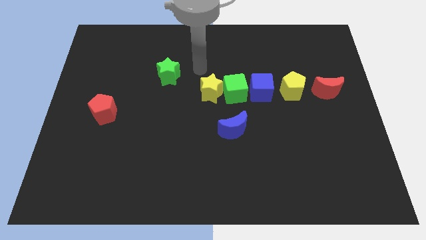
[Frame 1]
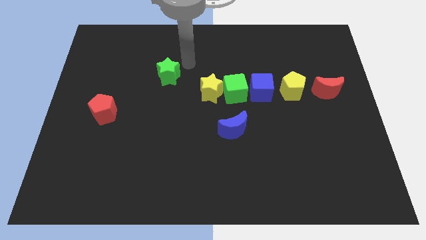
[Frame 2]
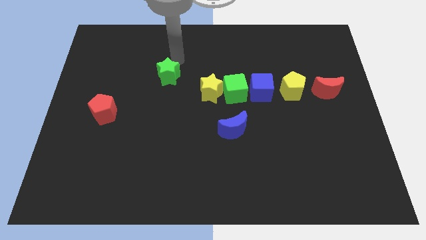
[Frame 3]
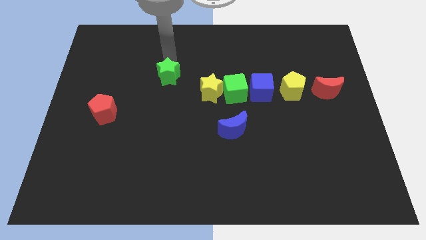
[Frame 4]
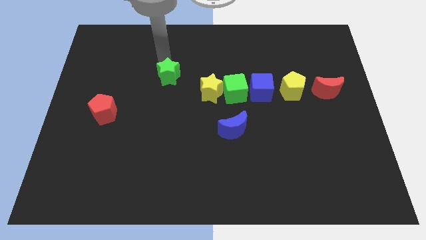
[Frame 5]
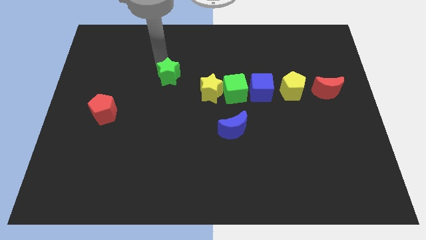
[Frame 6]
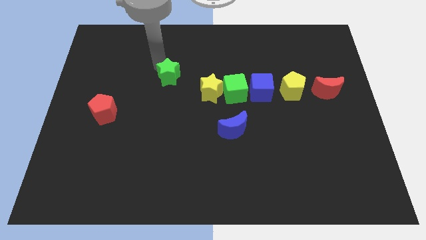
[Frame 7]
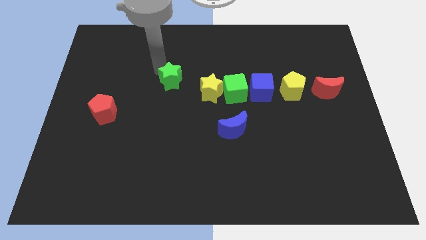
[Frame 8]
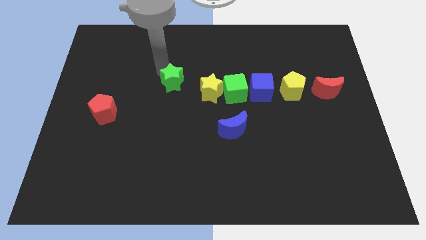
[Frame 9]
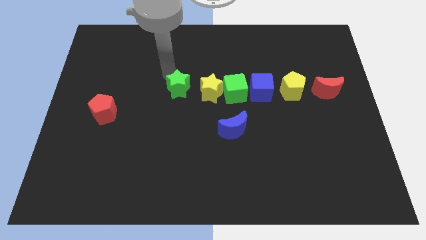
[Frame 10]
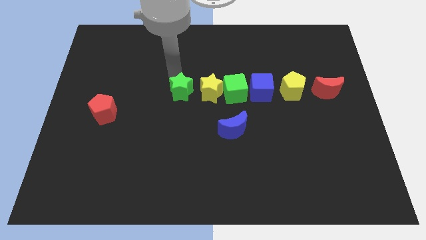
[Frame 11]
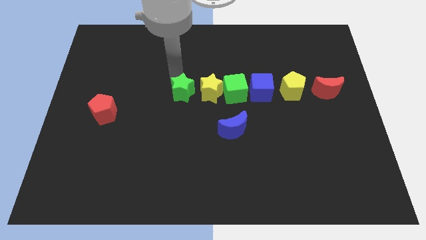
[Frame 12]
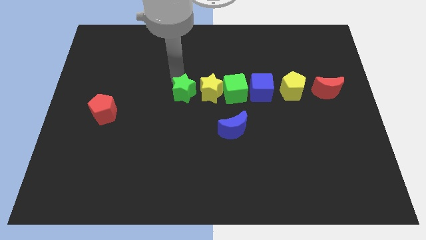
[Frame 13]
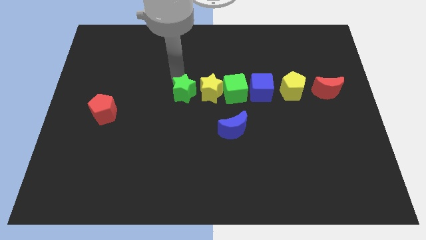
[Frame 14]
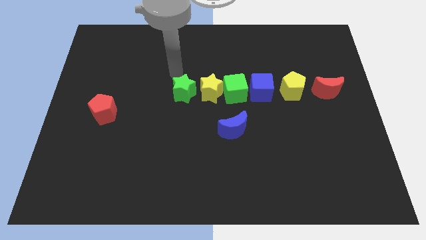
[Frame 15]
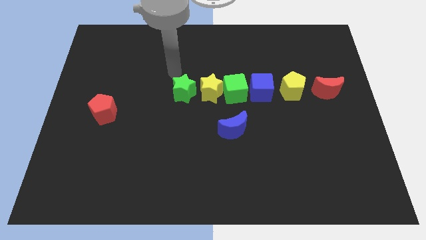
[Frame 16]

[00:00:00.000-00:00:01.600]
push the green star to the left side of the yellow star

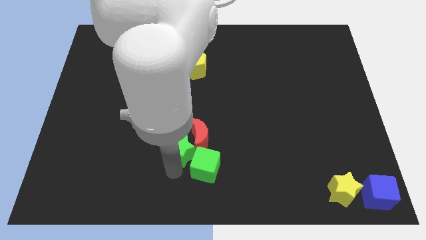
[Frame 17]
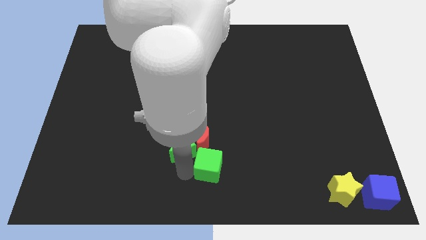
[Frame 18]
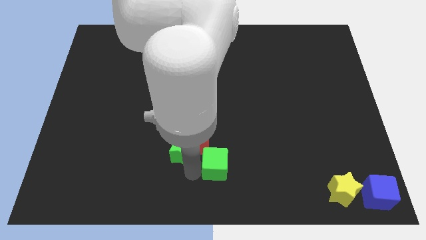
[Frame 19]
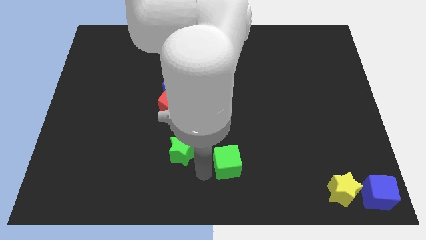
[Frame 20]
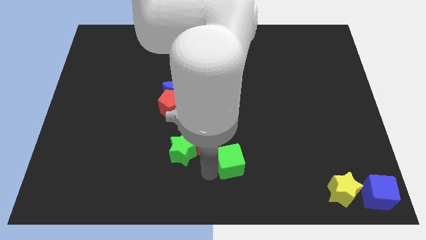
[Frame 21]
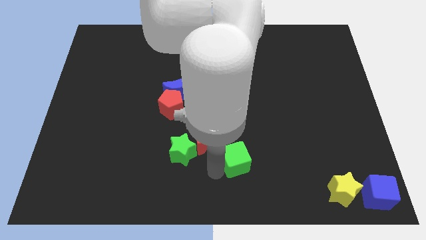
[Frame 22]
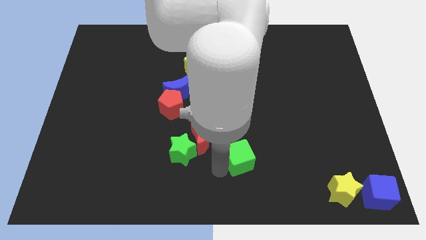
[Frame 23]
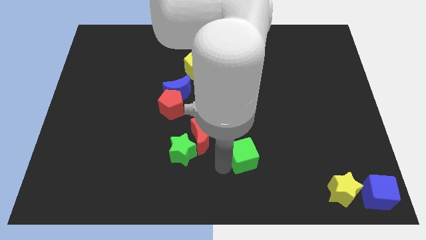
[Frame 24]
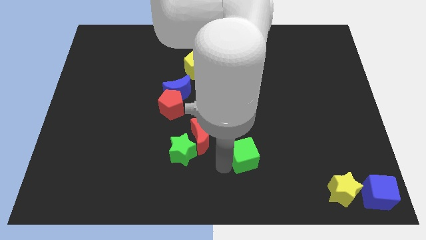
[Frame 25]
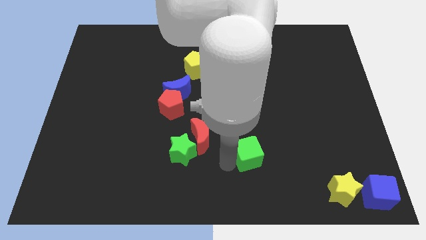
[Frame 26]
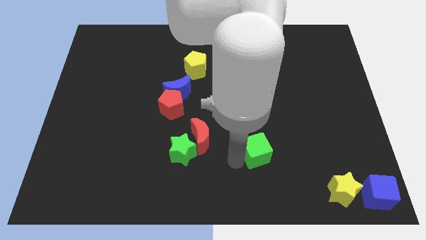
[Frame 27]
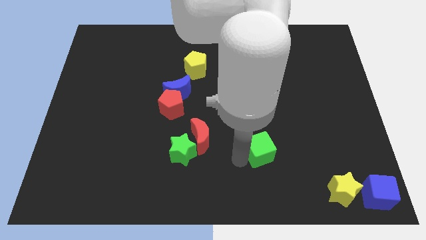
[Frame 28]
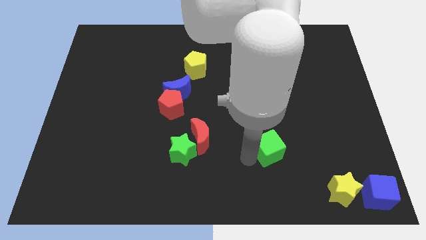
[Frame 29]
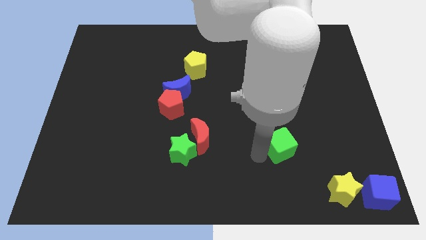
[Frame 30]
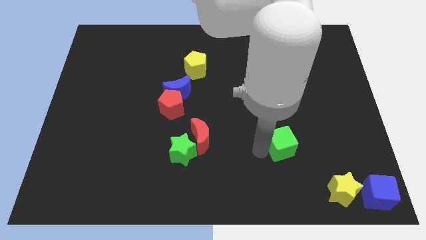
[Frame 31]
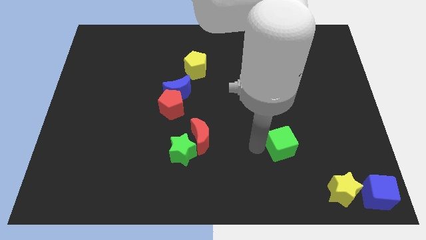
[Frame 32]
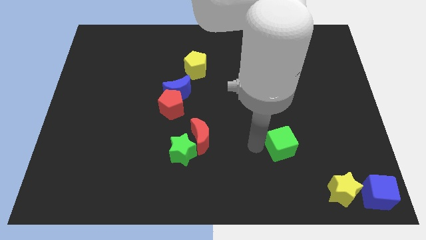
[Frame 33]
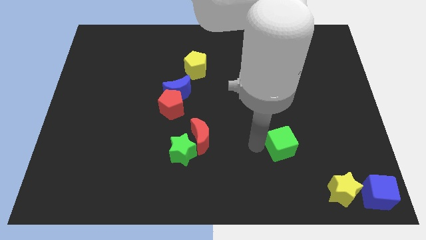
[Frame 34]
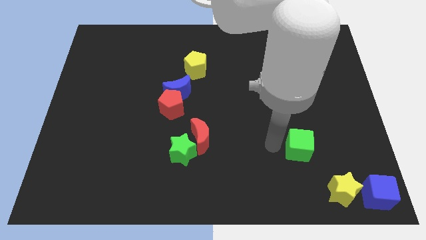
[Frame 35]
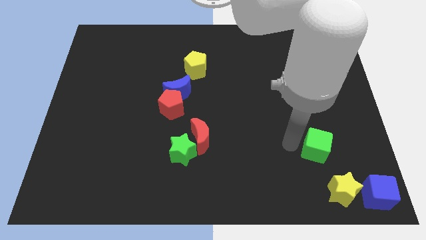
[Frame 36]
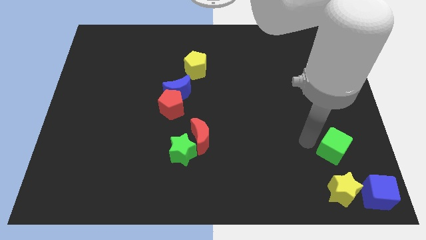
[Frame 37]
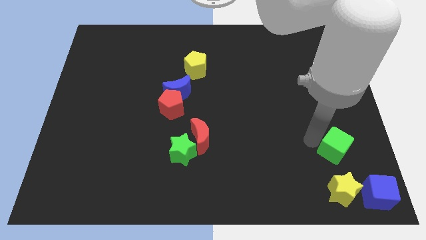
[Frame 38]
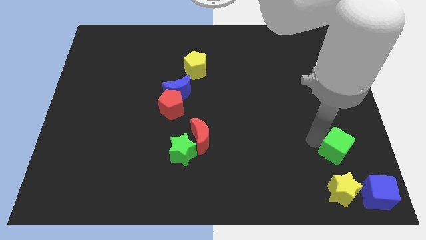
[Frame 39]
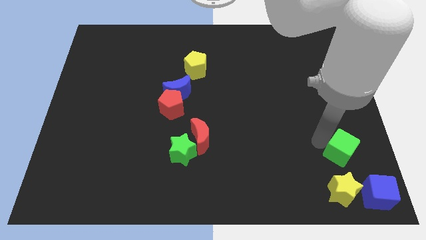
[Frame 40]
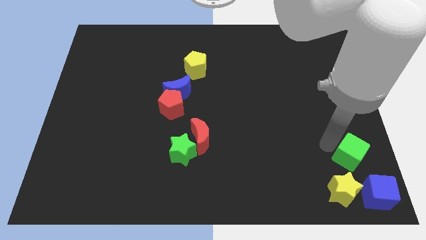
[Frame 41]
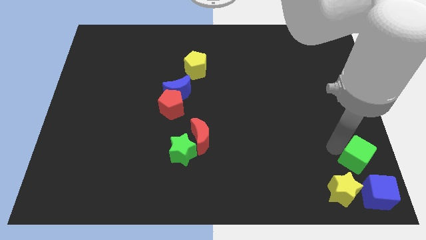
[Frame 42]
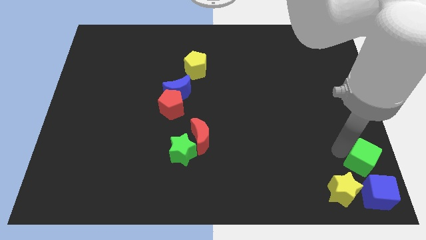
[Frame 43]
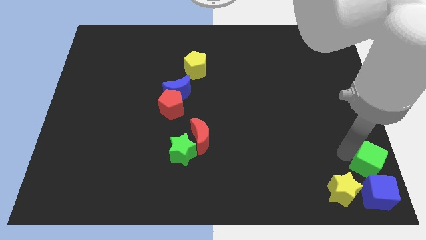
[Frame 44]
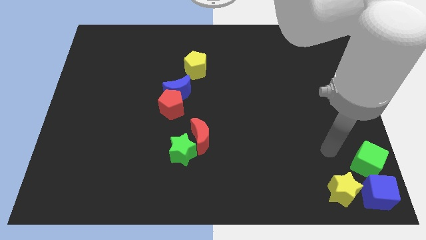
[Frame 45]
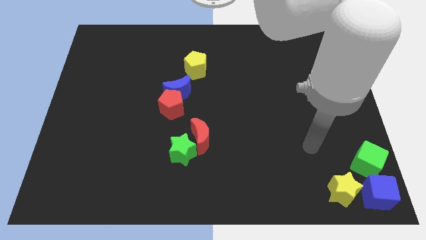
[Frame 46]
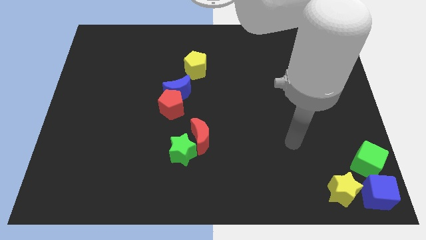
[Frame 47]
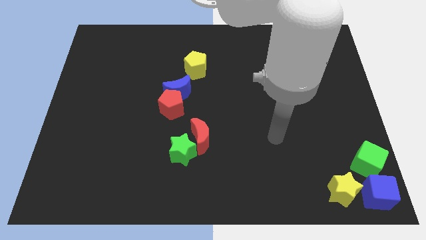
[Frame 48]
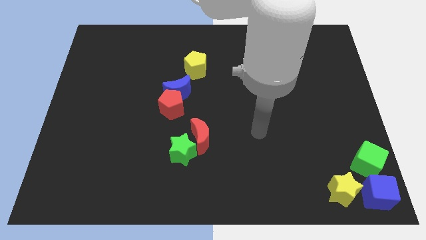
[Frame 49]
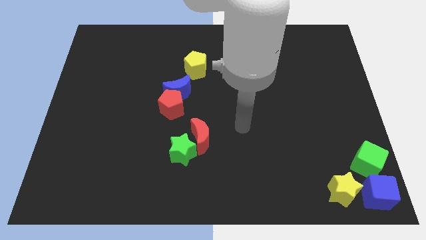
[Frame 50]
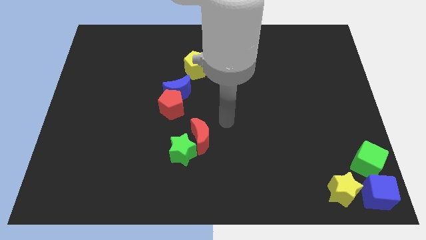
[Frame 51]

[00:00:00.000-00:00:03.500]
place the green cube above the blue cube and the yellow star

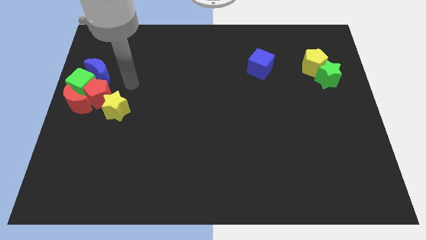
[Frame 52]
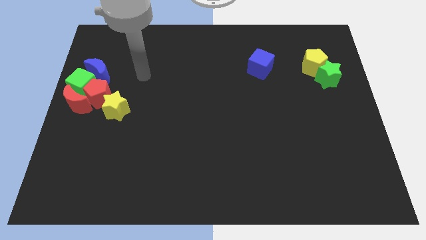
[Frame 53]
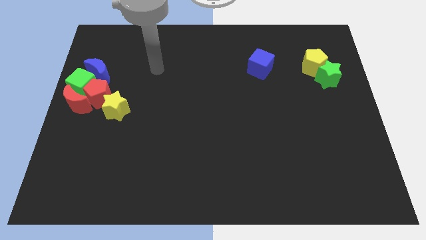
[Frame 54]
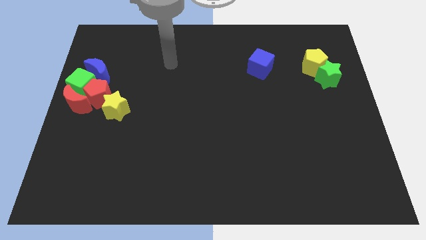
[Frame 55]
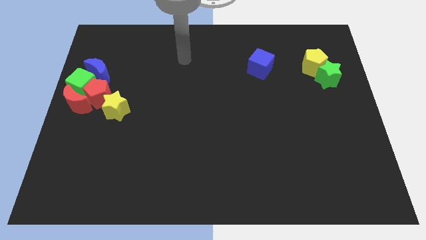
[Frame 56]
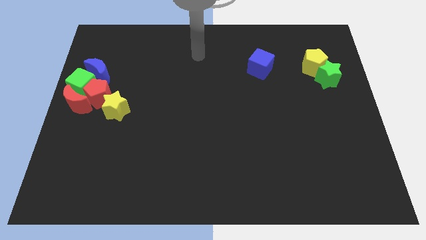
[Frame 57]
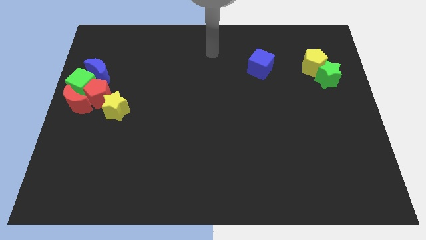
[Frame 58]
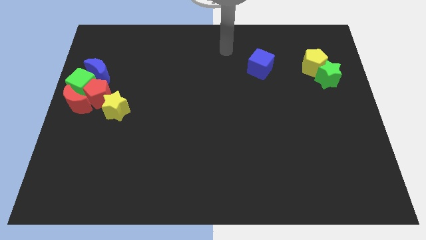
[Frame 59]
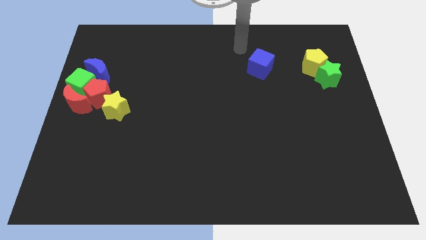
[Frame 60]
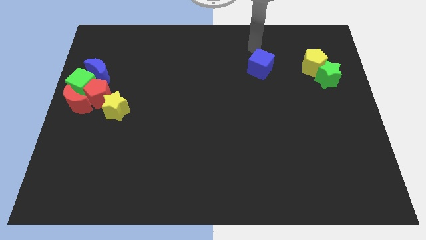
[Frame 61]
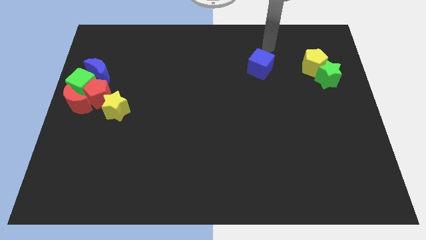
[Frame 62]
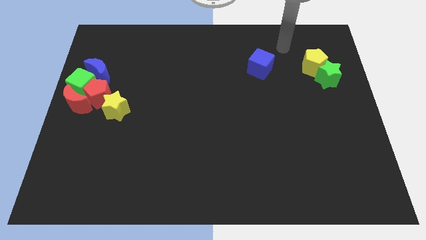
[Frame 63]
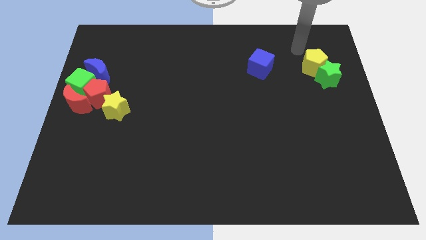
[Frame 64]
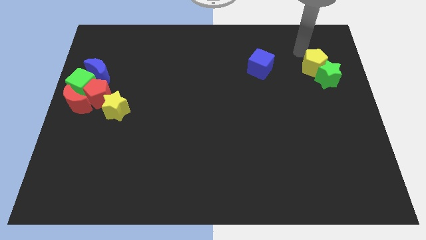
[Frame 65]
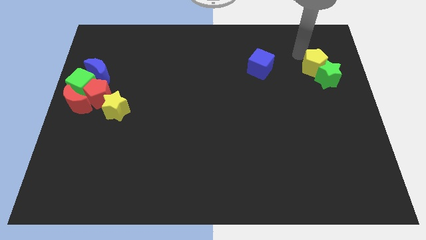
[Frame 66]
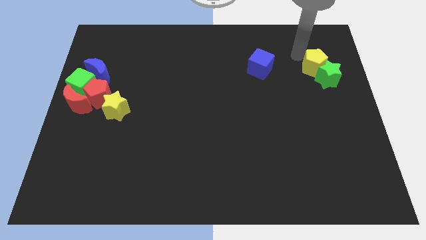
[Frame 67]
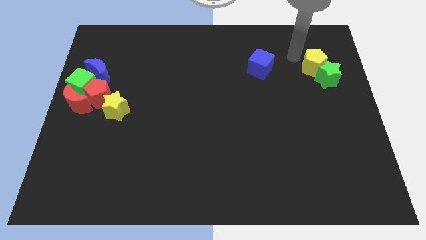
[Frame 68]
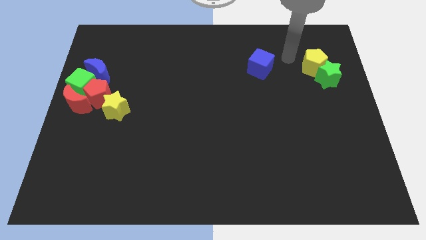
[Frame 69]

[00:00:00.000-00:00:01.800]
point your arm to the left of the yellow pentagon

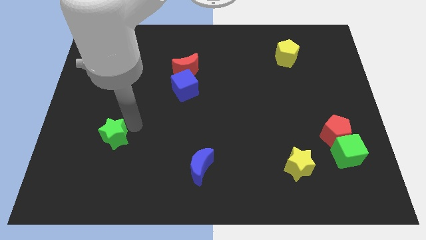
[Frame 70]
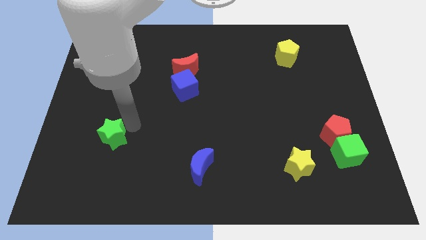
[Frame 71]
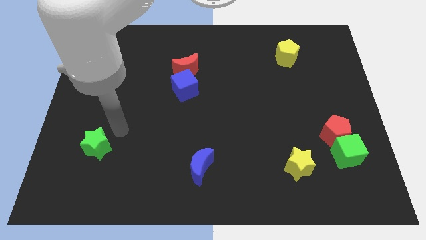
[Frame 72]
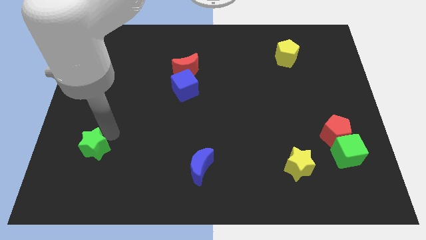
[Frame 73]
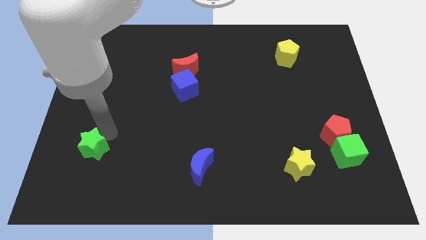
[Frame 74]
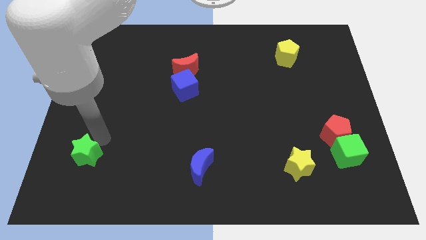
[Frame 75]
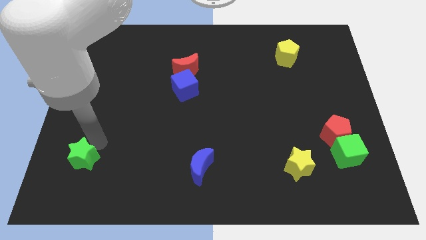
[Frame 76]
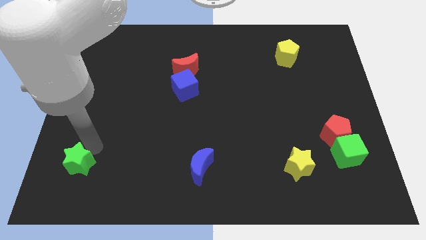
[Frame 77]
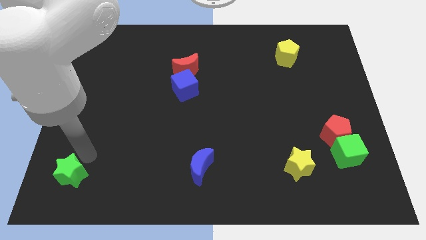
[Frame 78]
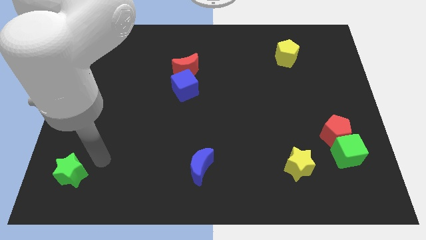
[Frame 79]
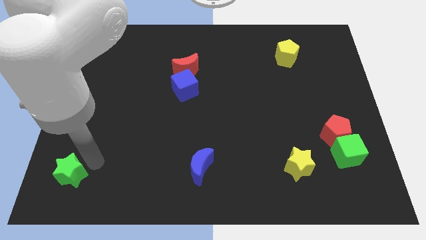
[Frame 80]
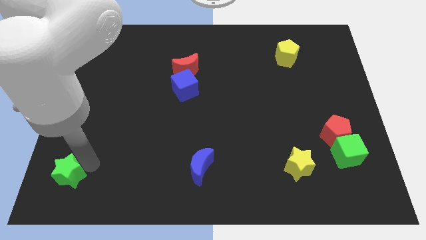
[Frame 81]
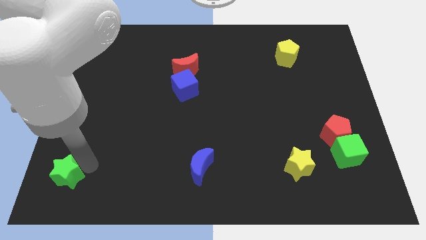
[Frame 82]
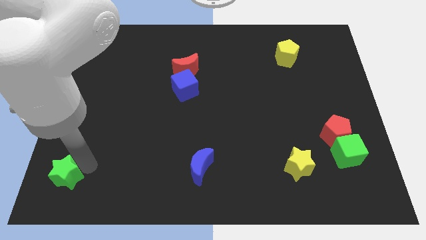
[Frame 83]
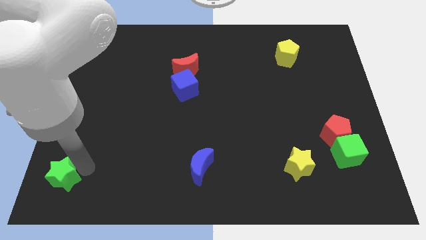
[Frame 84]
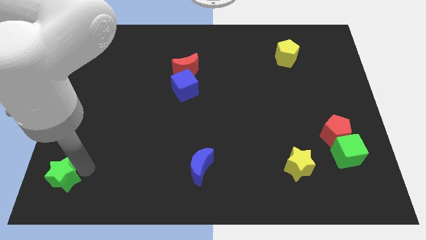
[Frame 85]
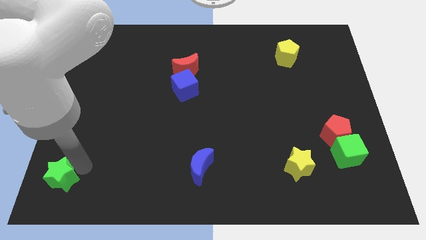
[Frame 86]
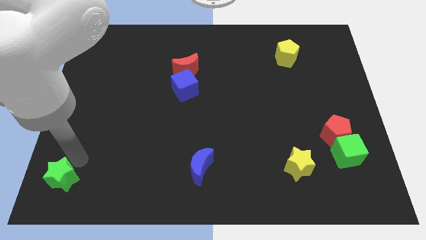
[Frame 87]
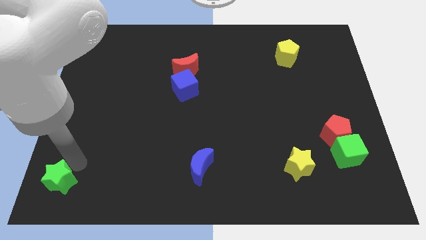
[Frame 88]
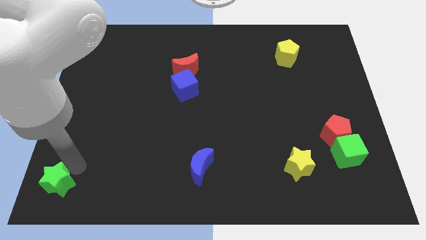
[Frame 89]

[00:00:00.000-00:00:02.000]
place the green star in the bottom left

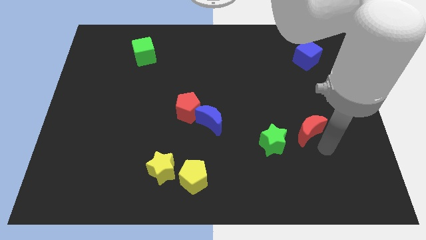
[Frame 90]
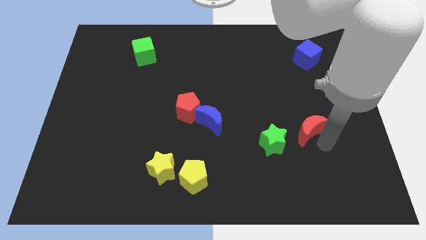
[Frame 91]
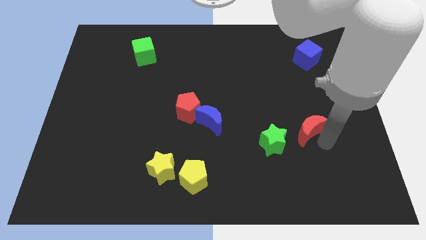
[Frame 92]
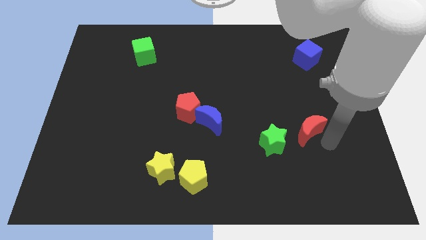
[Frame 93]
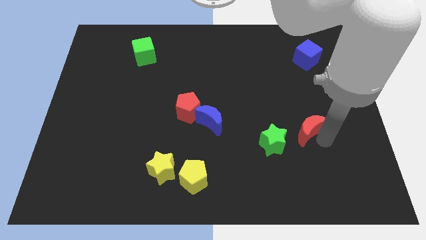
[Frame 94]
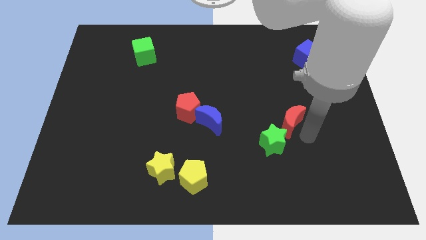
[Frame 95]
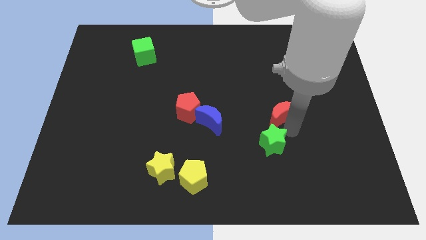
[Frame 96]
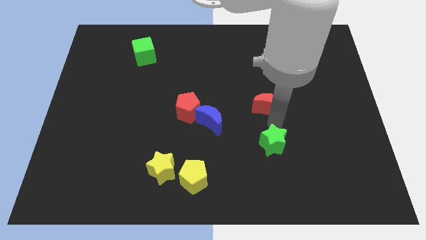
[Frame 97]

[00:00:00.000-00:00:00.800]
place the red crescent above the green star
